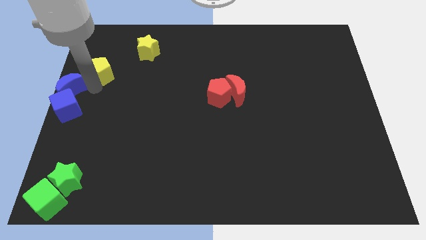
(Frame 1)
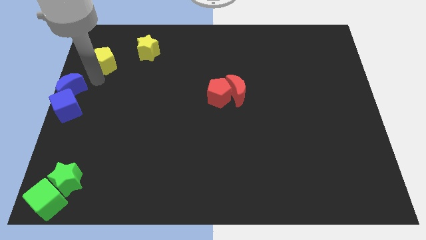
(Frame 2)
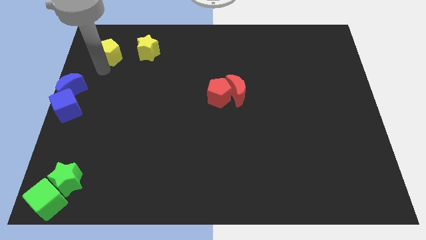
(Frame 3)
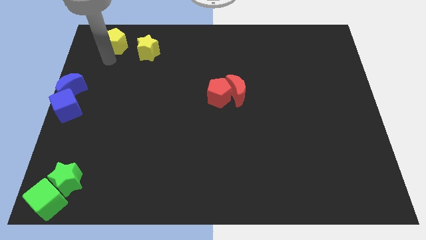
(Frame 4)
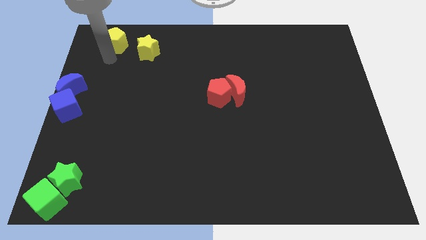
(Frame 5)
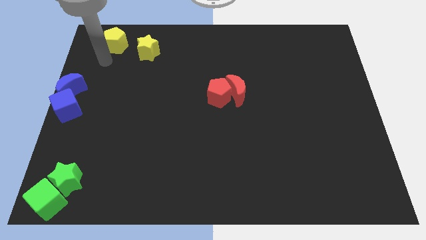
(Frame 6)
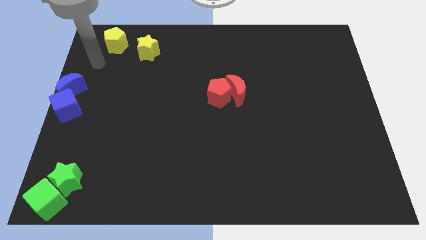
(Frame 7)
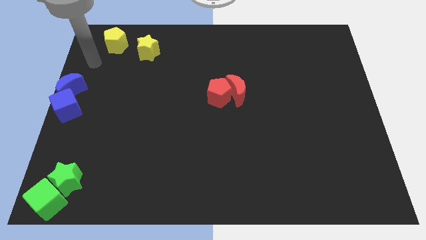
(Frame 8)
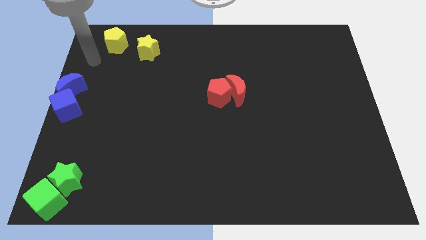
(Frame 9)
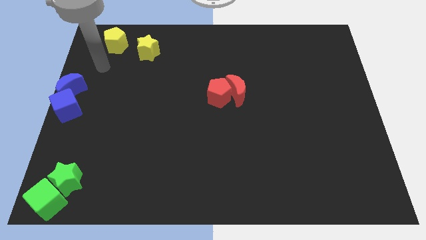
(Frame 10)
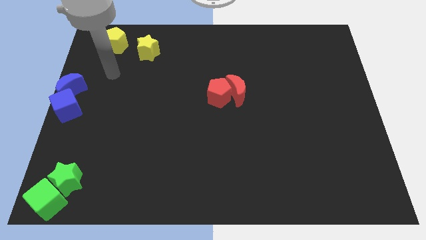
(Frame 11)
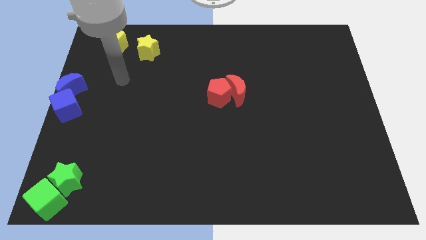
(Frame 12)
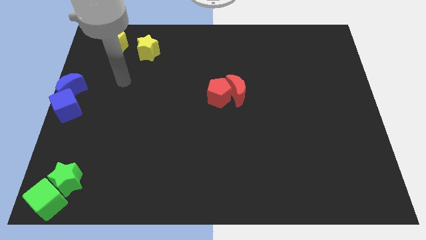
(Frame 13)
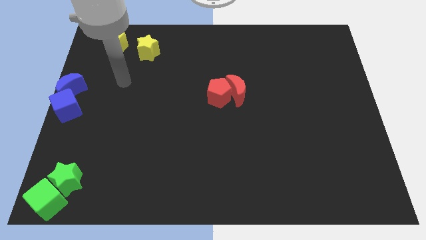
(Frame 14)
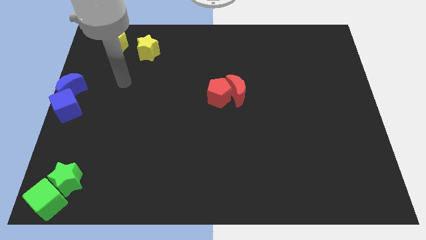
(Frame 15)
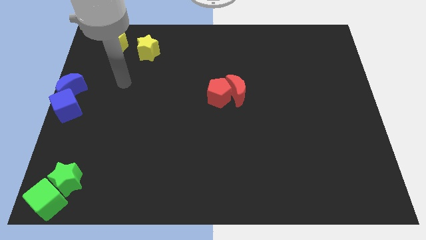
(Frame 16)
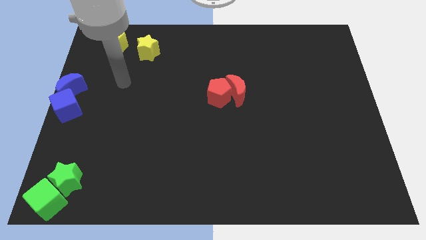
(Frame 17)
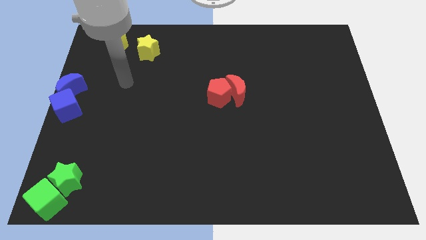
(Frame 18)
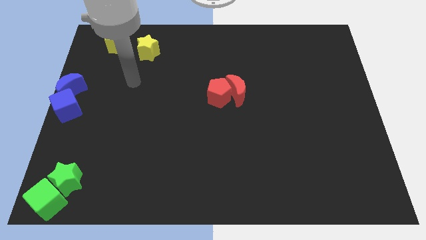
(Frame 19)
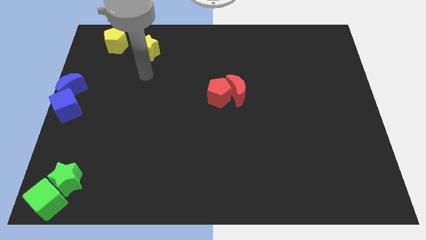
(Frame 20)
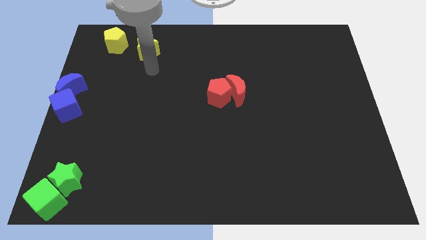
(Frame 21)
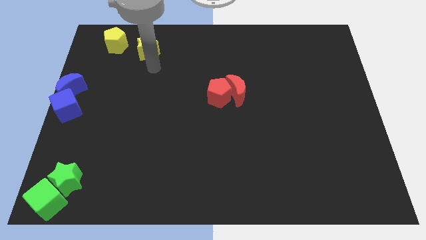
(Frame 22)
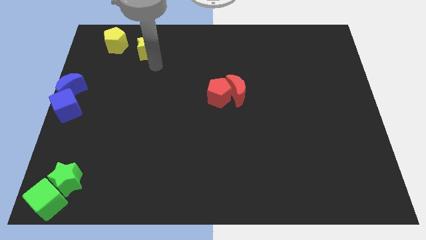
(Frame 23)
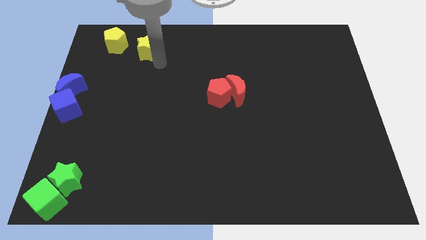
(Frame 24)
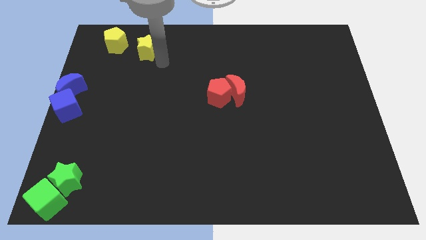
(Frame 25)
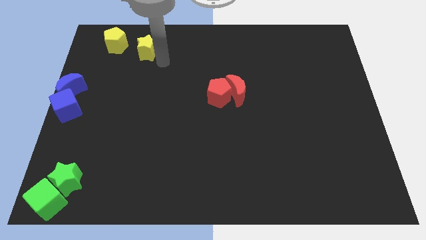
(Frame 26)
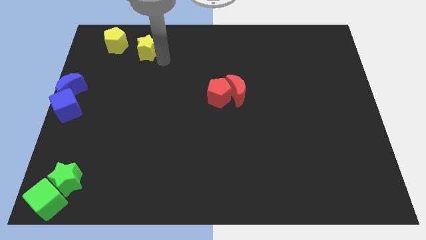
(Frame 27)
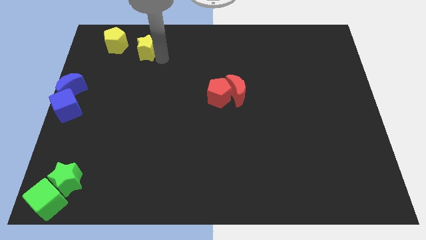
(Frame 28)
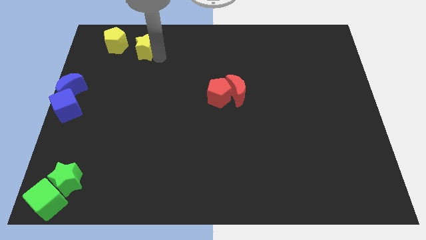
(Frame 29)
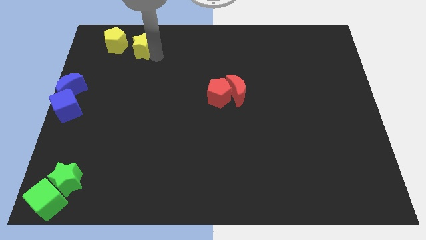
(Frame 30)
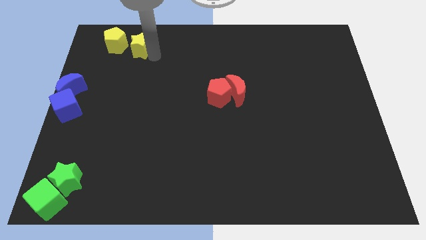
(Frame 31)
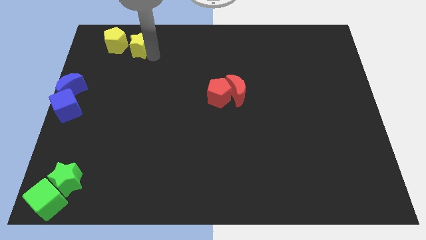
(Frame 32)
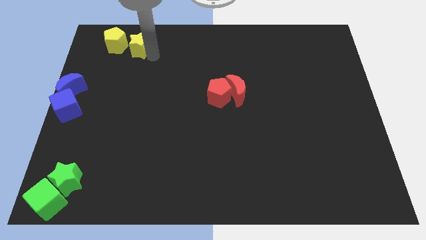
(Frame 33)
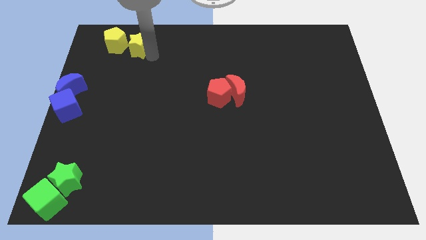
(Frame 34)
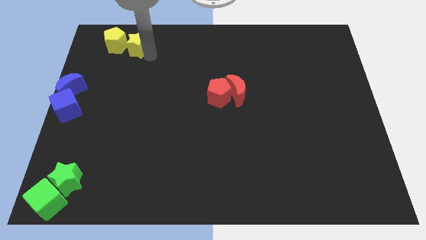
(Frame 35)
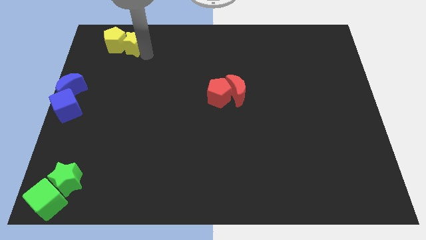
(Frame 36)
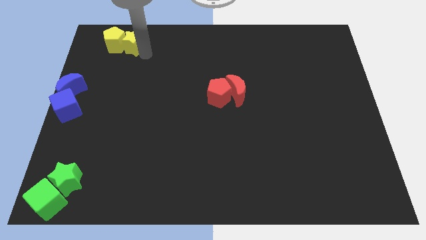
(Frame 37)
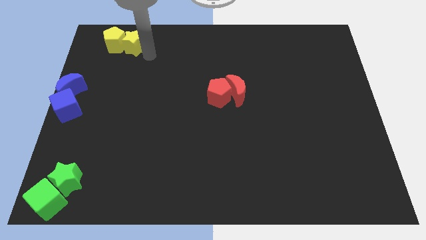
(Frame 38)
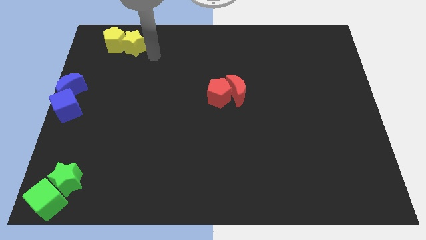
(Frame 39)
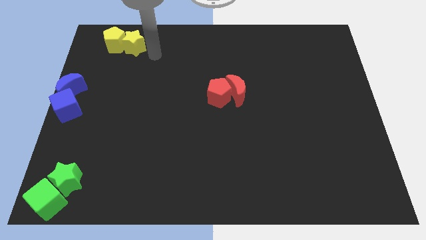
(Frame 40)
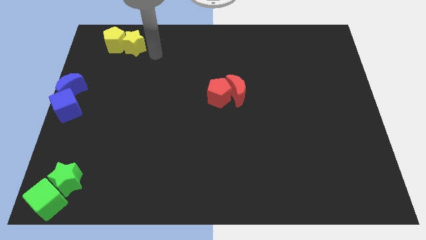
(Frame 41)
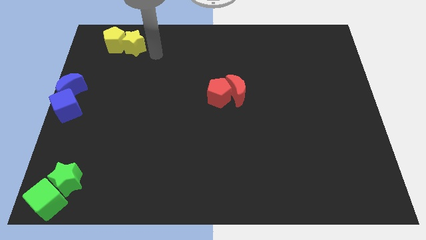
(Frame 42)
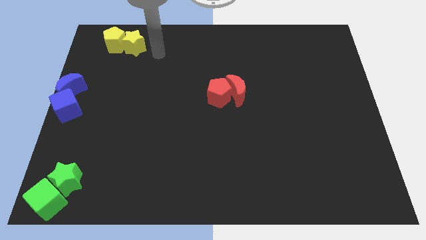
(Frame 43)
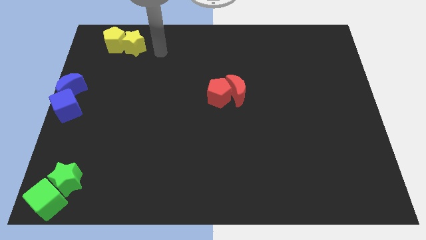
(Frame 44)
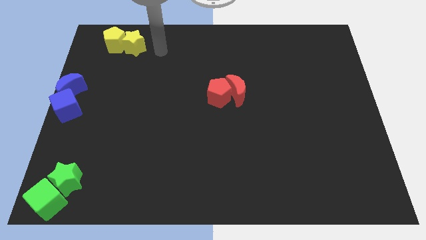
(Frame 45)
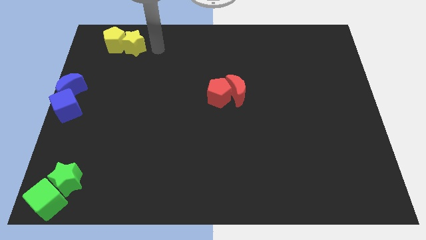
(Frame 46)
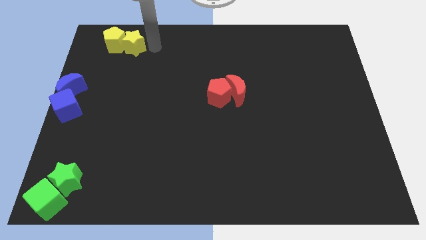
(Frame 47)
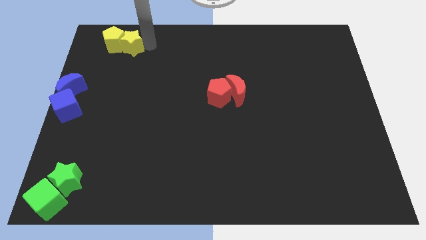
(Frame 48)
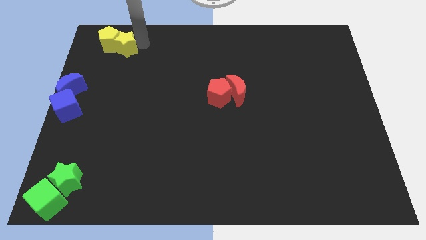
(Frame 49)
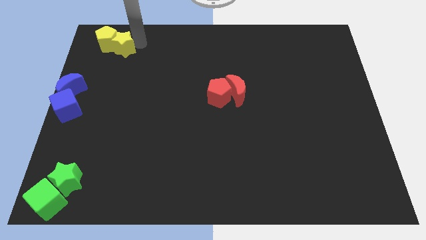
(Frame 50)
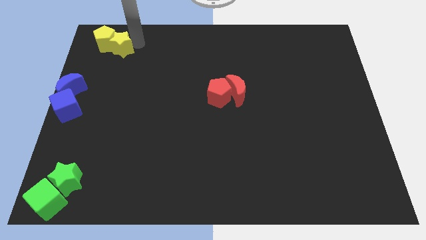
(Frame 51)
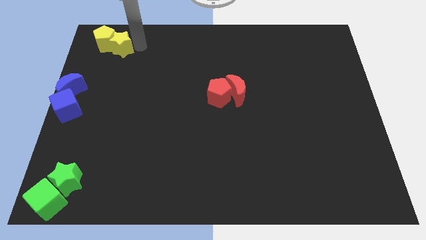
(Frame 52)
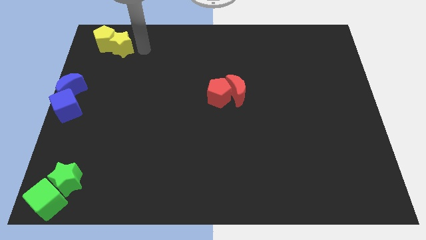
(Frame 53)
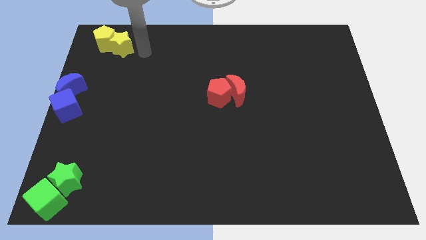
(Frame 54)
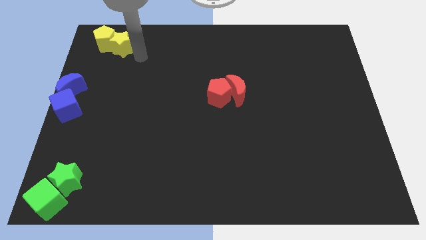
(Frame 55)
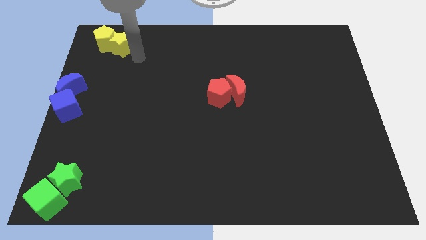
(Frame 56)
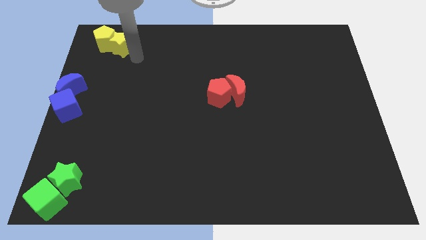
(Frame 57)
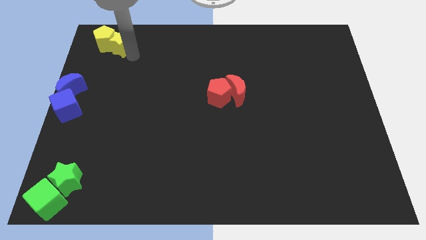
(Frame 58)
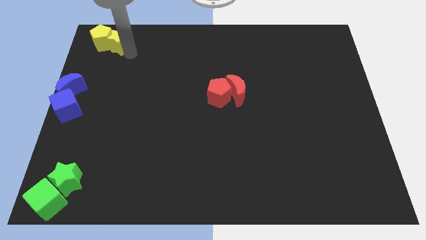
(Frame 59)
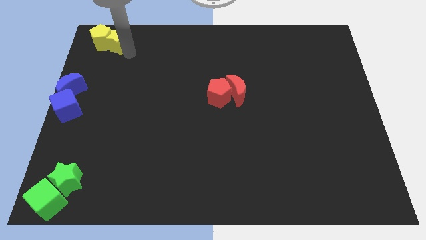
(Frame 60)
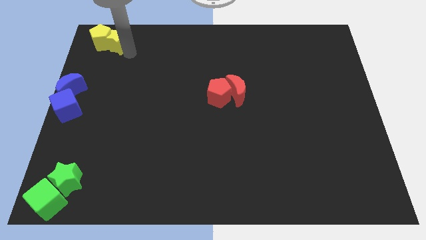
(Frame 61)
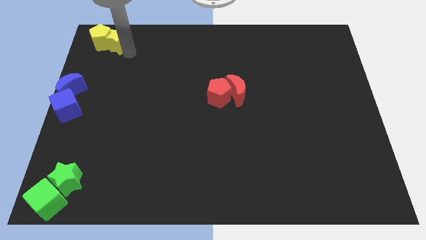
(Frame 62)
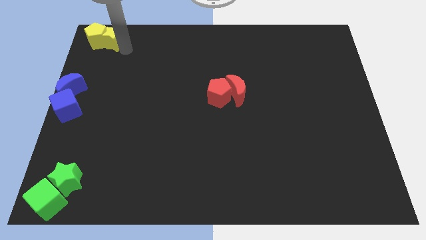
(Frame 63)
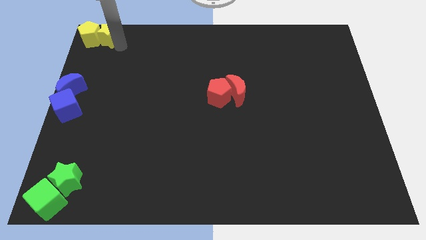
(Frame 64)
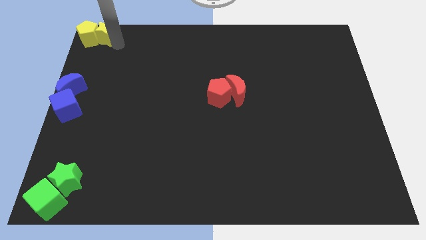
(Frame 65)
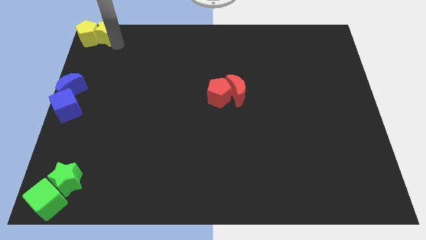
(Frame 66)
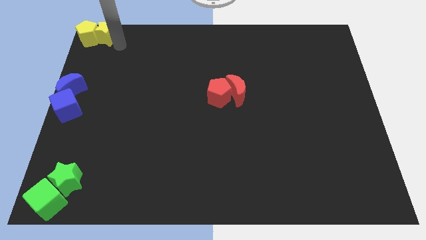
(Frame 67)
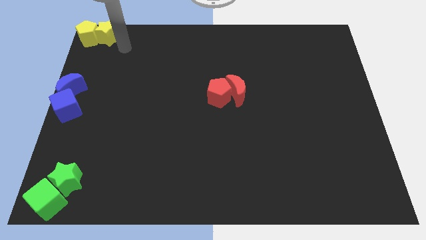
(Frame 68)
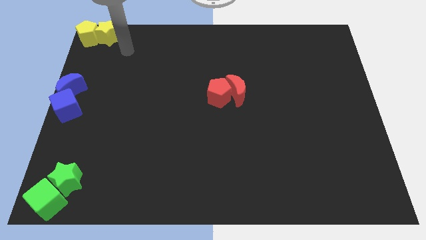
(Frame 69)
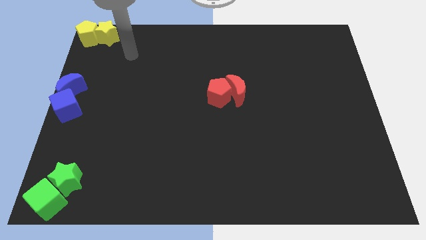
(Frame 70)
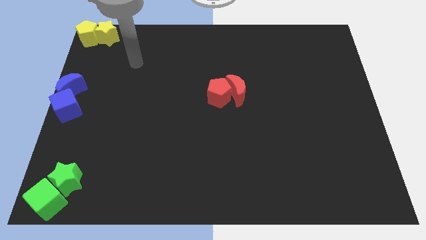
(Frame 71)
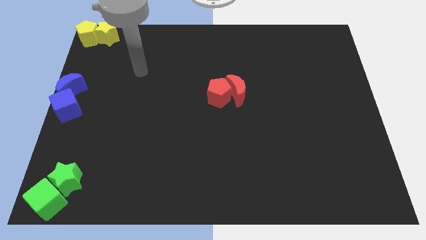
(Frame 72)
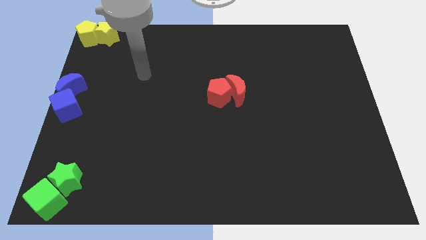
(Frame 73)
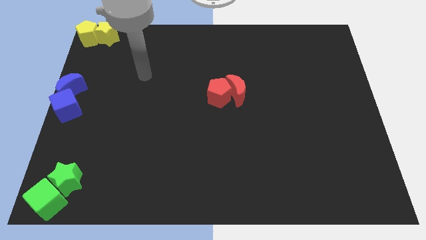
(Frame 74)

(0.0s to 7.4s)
push the yellow blocks to the top left corner of the board

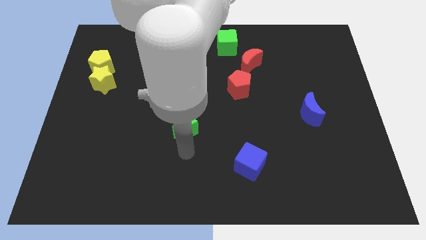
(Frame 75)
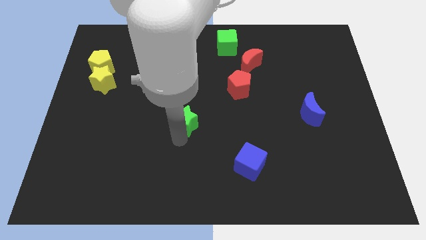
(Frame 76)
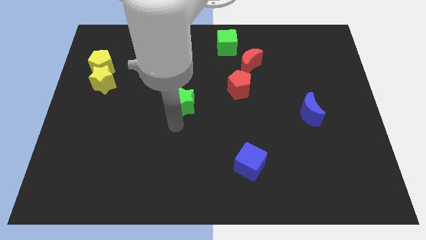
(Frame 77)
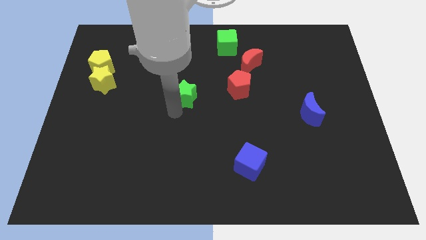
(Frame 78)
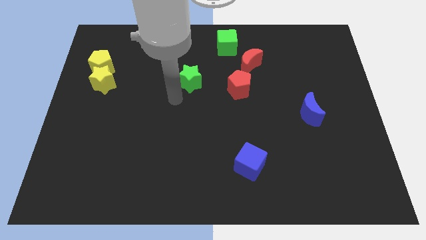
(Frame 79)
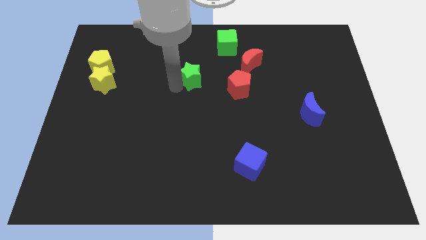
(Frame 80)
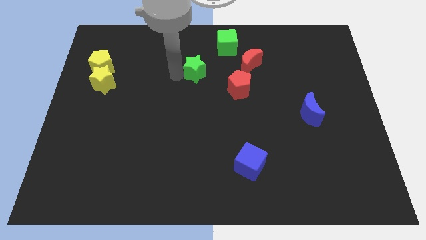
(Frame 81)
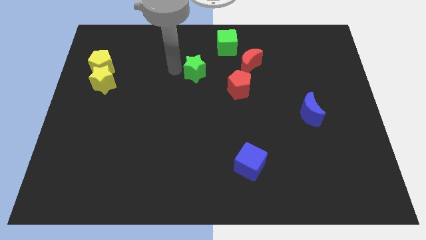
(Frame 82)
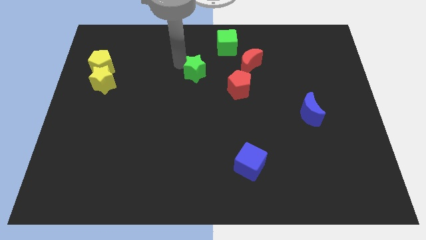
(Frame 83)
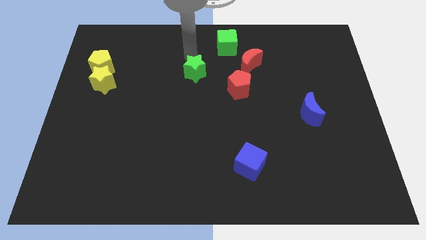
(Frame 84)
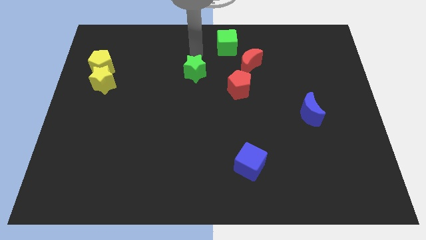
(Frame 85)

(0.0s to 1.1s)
move the green star to the left of the red crescent

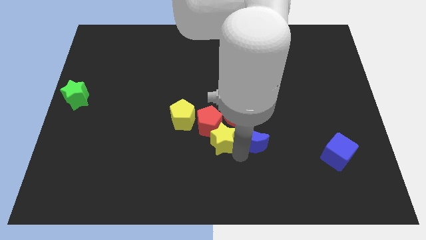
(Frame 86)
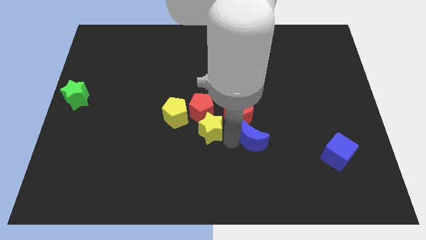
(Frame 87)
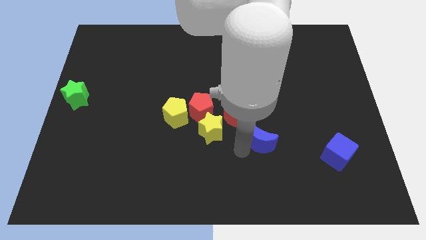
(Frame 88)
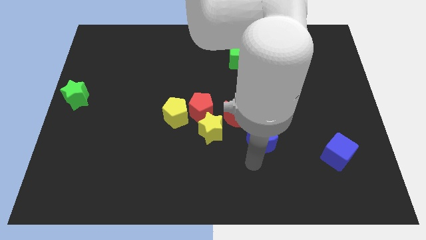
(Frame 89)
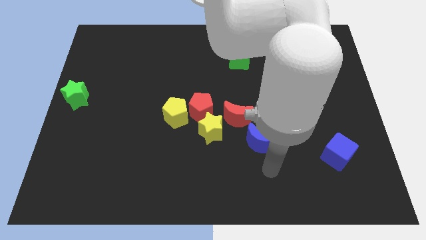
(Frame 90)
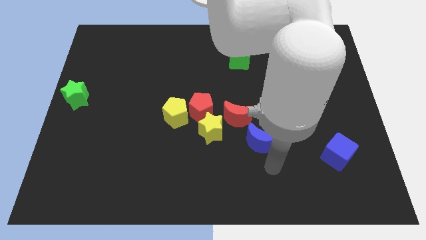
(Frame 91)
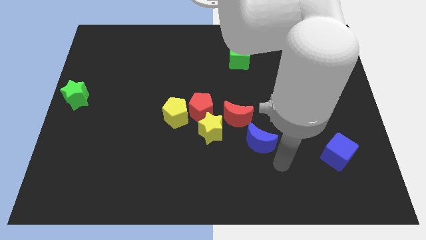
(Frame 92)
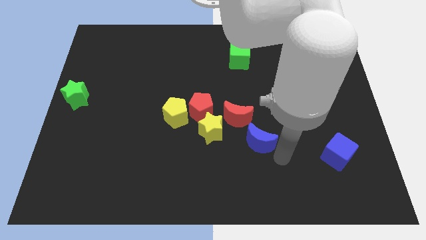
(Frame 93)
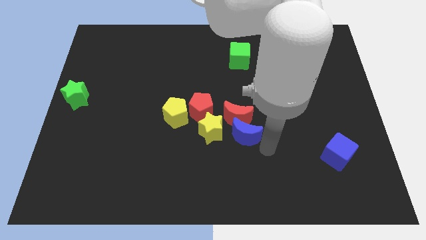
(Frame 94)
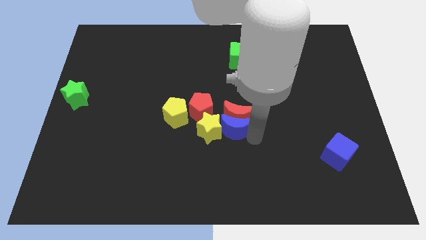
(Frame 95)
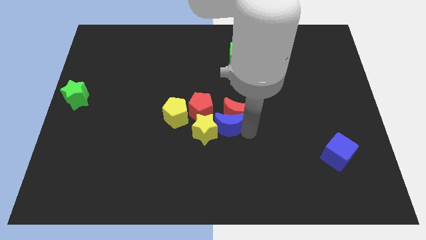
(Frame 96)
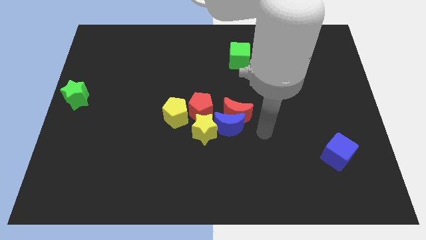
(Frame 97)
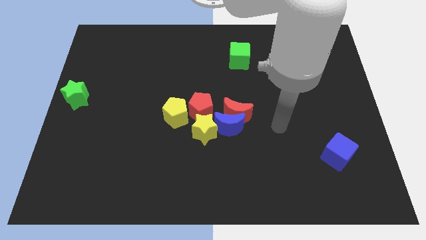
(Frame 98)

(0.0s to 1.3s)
push the blue crescent below to the red crescent
